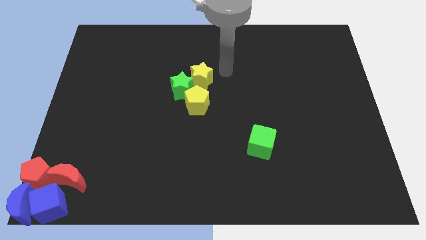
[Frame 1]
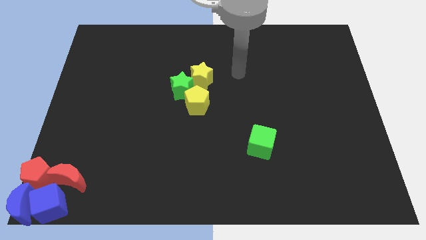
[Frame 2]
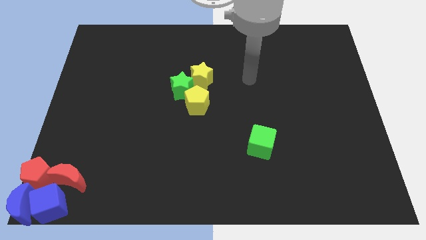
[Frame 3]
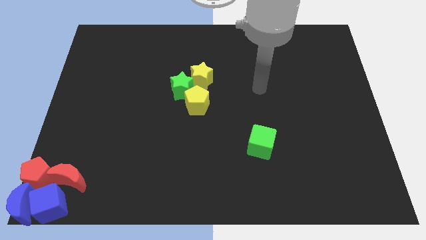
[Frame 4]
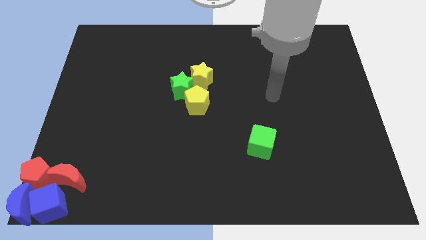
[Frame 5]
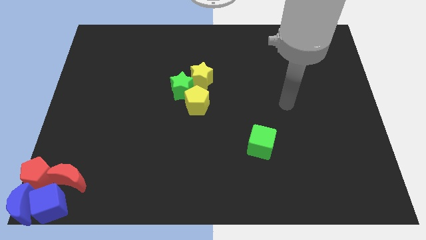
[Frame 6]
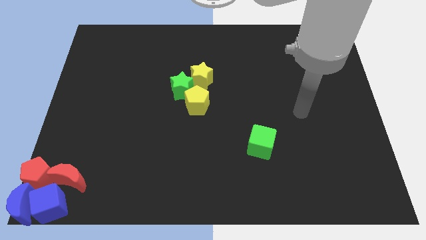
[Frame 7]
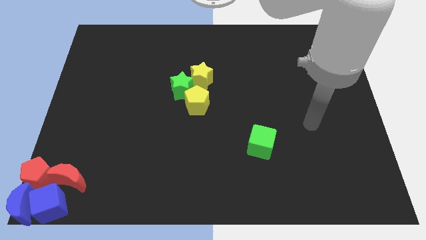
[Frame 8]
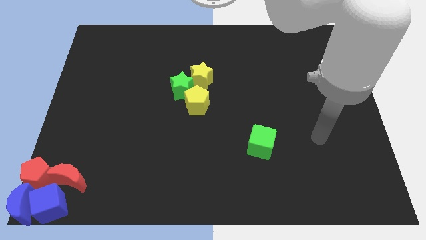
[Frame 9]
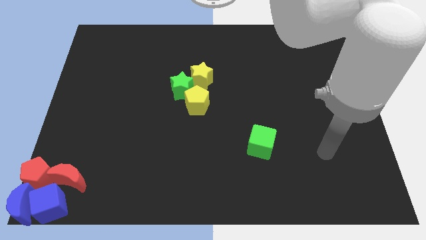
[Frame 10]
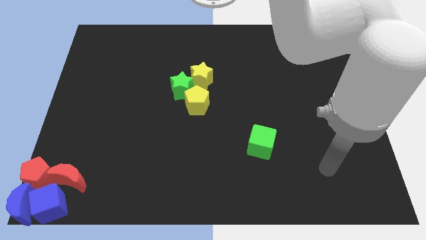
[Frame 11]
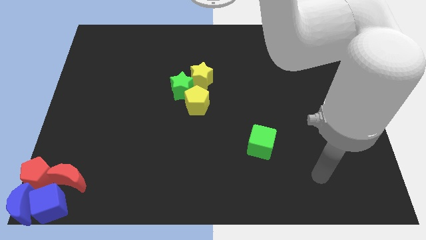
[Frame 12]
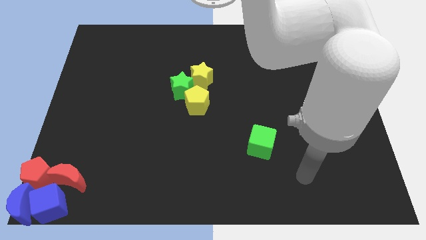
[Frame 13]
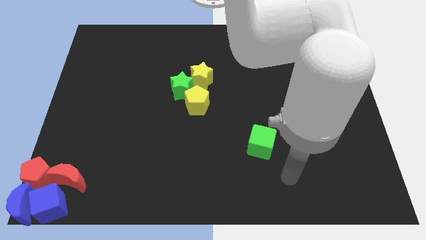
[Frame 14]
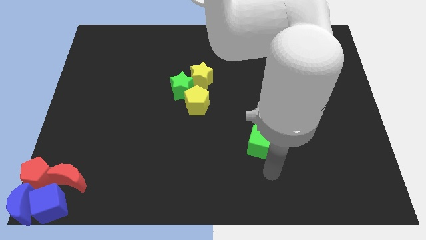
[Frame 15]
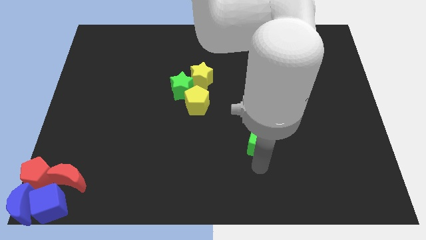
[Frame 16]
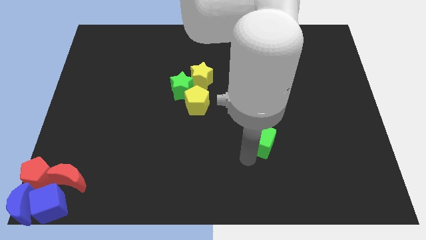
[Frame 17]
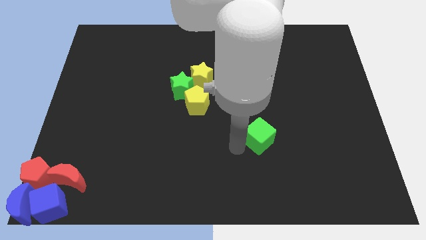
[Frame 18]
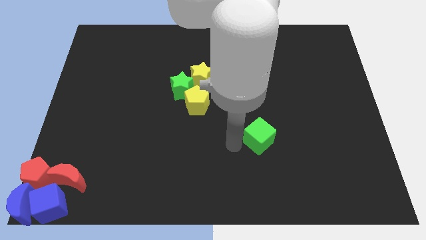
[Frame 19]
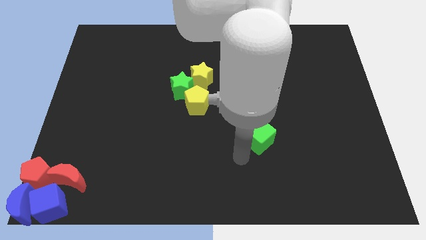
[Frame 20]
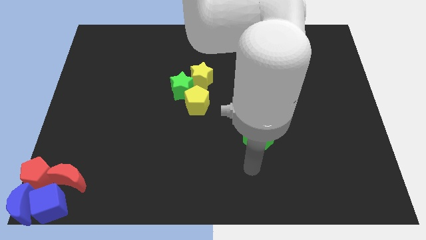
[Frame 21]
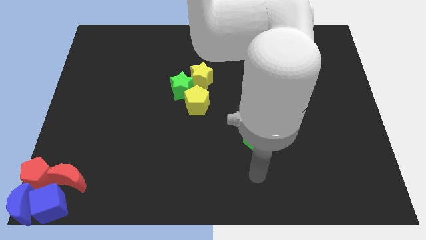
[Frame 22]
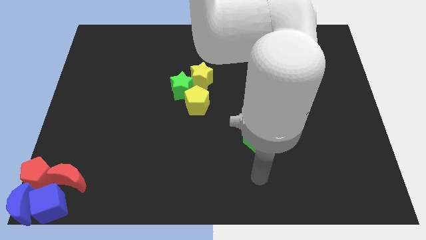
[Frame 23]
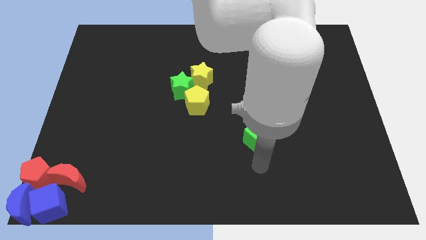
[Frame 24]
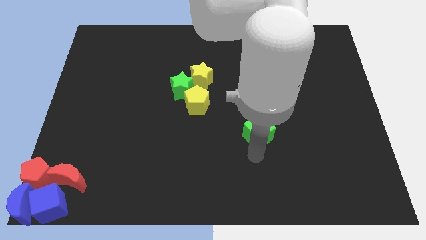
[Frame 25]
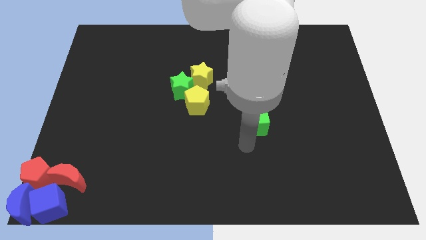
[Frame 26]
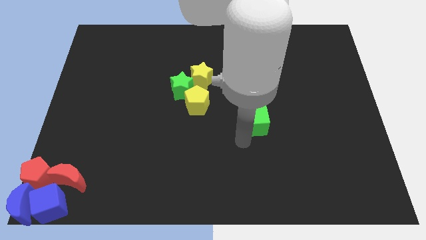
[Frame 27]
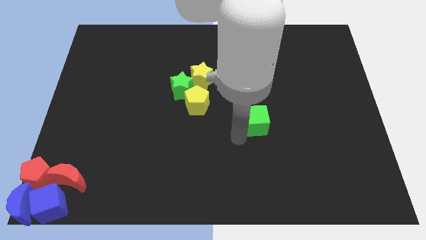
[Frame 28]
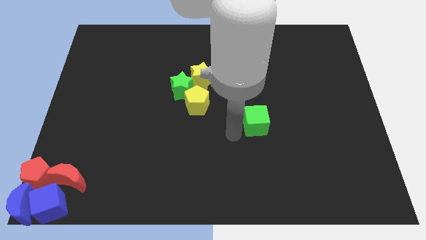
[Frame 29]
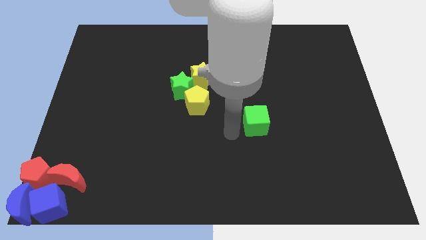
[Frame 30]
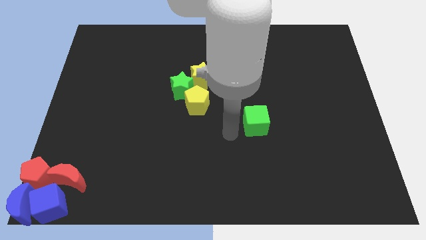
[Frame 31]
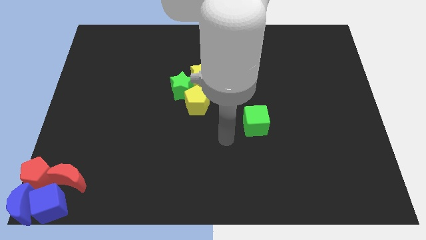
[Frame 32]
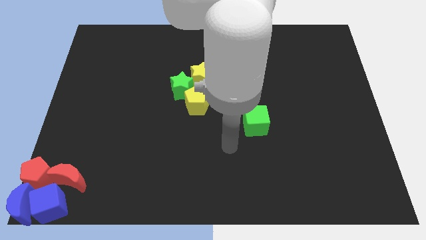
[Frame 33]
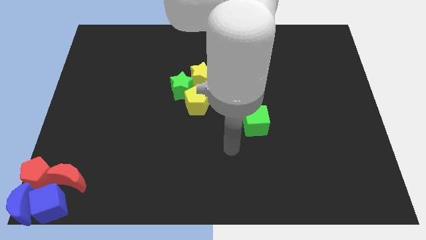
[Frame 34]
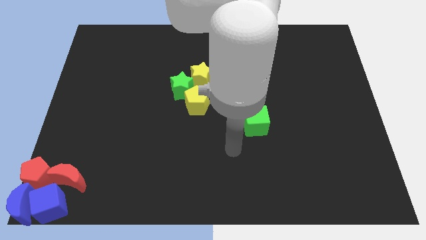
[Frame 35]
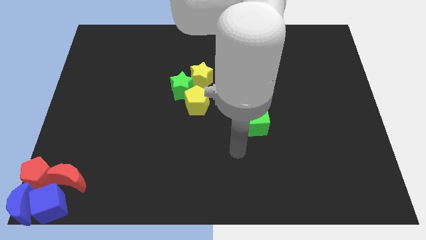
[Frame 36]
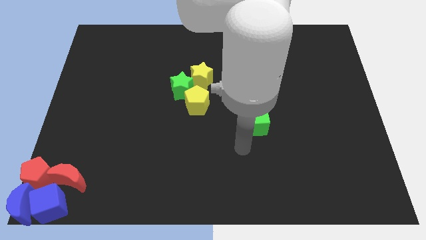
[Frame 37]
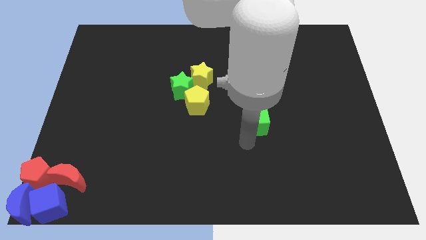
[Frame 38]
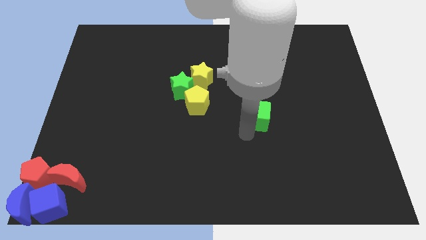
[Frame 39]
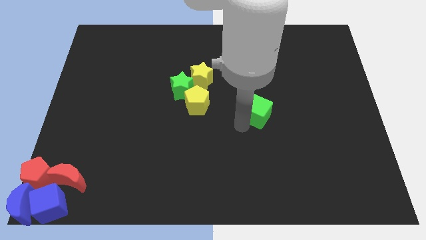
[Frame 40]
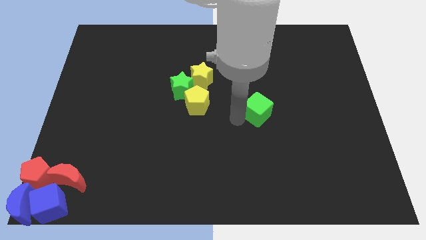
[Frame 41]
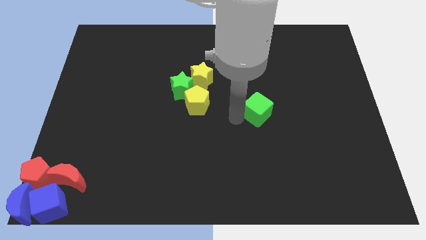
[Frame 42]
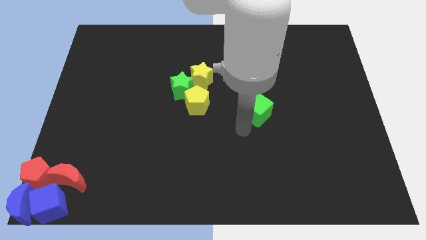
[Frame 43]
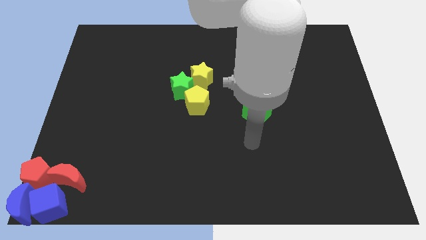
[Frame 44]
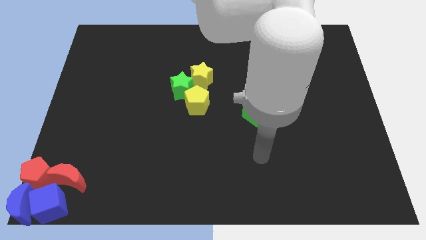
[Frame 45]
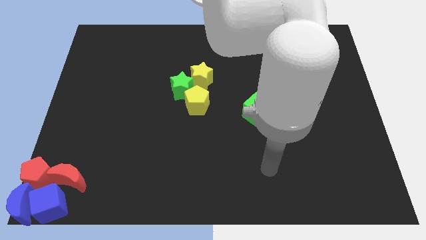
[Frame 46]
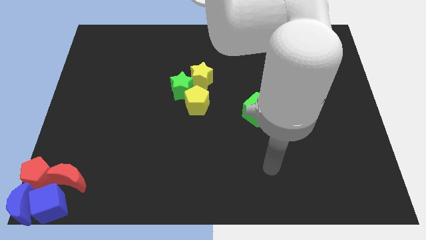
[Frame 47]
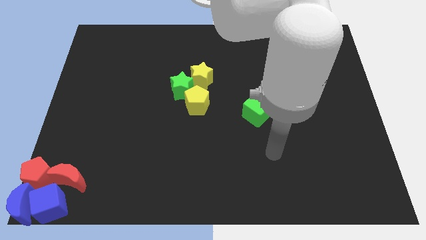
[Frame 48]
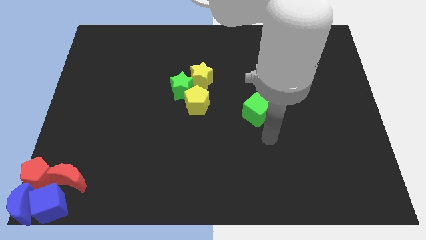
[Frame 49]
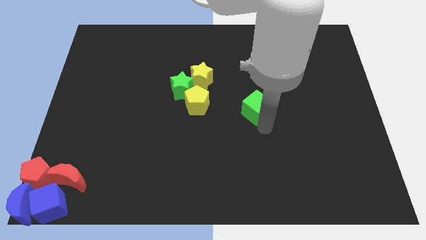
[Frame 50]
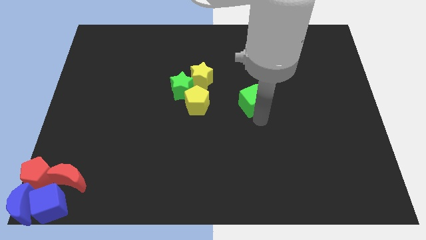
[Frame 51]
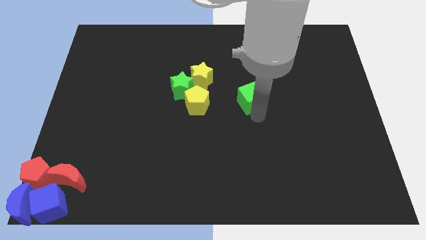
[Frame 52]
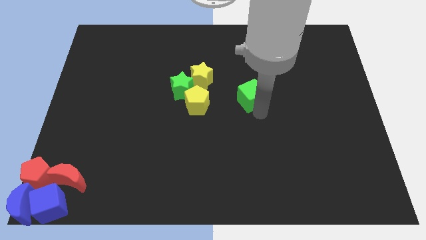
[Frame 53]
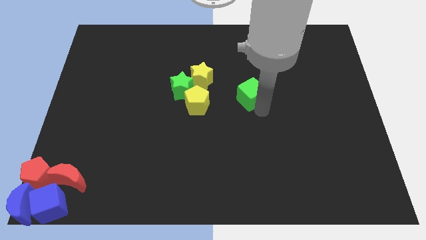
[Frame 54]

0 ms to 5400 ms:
move the green cube to the center of the board

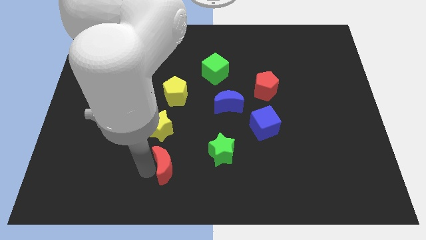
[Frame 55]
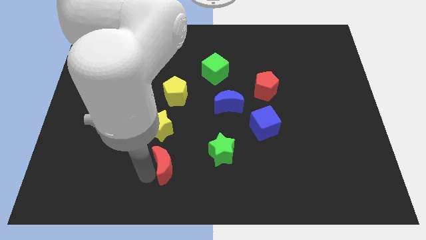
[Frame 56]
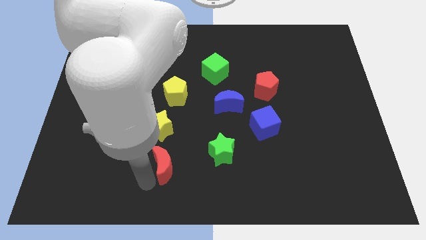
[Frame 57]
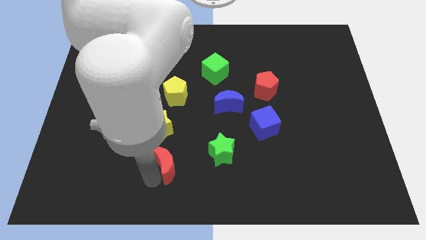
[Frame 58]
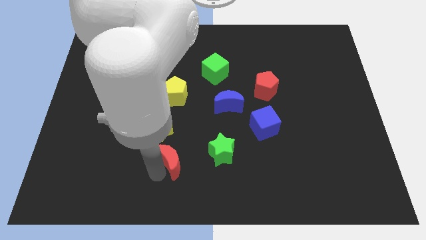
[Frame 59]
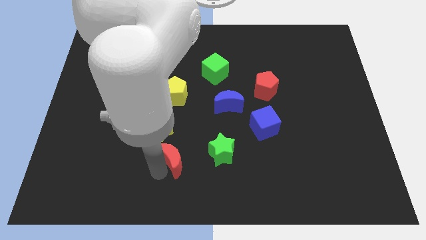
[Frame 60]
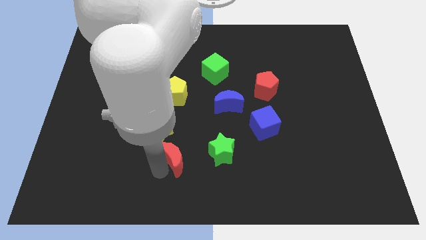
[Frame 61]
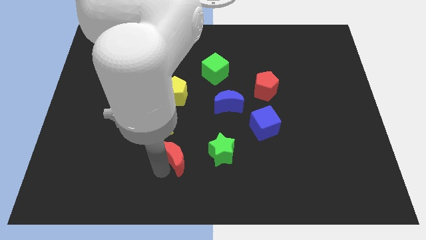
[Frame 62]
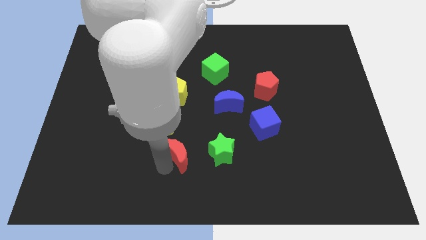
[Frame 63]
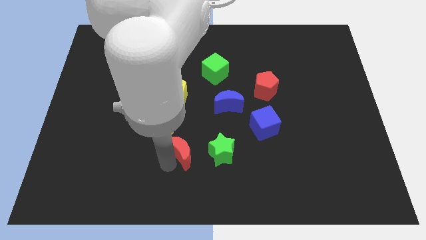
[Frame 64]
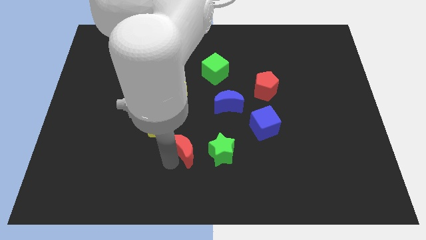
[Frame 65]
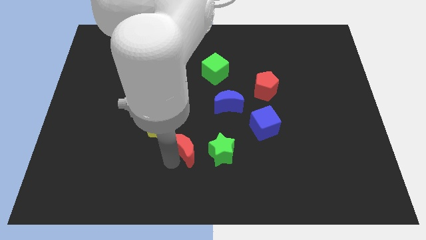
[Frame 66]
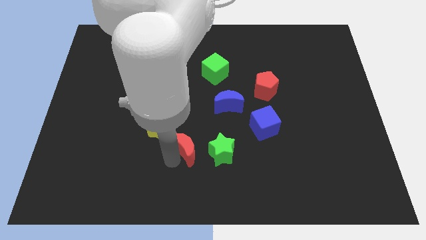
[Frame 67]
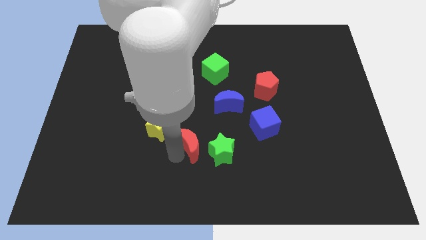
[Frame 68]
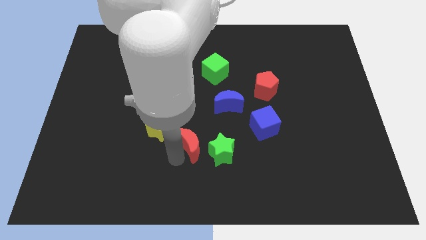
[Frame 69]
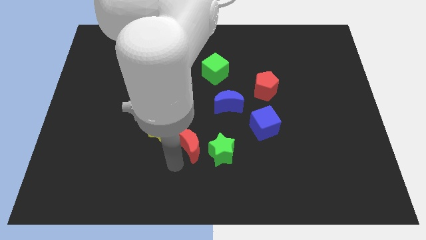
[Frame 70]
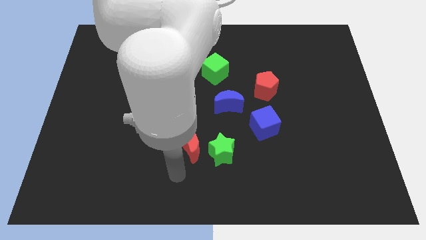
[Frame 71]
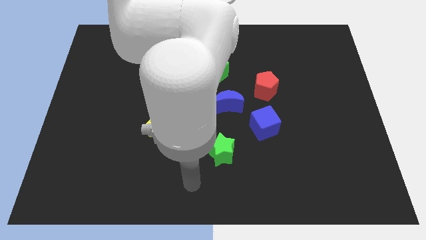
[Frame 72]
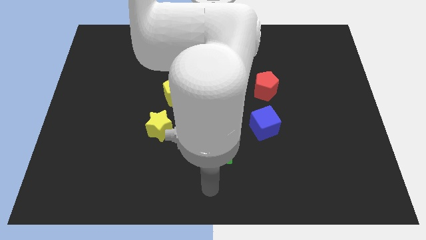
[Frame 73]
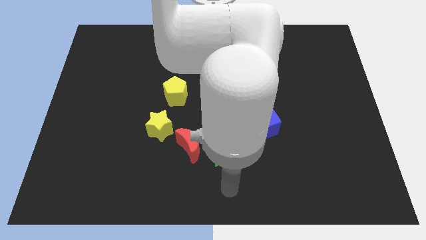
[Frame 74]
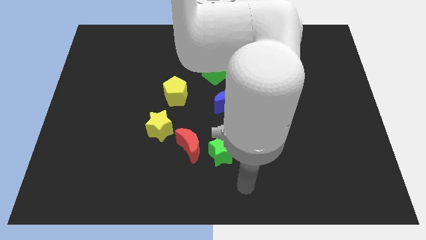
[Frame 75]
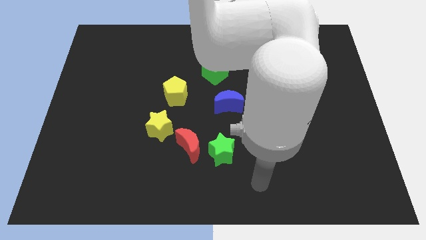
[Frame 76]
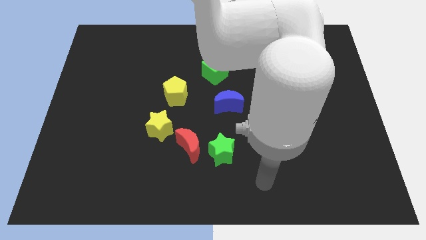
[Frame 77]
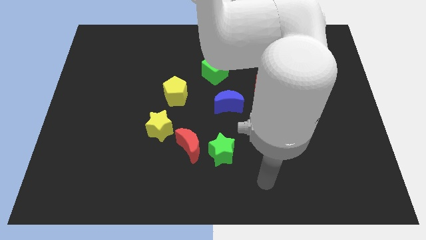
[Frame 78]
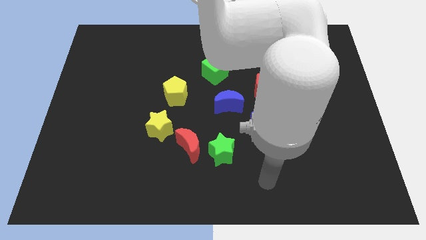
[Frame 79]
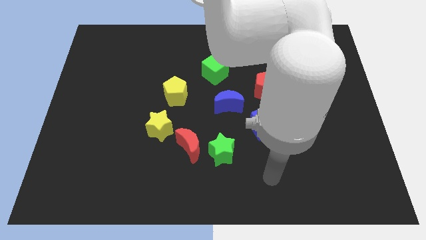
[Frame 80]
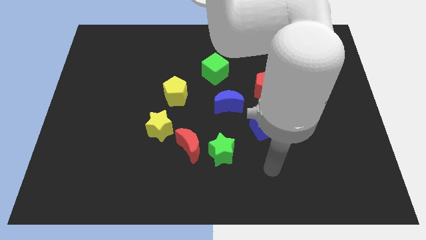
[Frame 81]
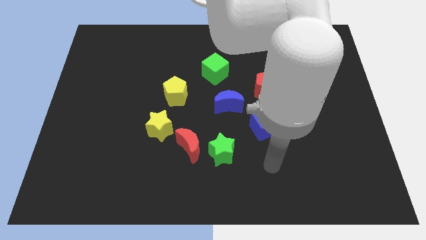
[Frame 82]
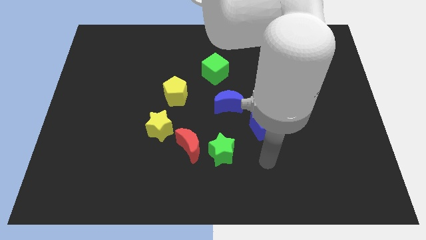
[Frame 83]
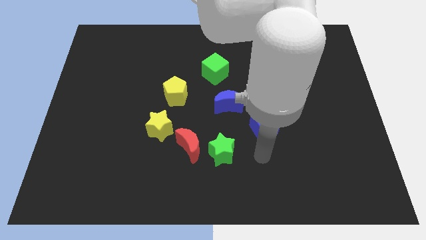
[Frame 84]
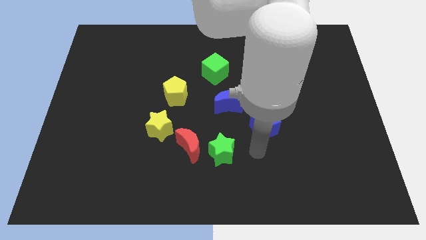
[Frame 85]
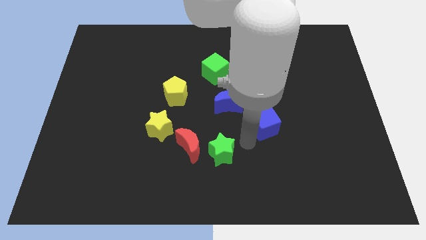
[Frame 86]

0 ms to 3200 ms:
place the red moon in between the yellow and green star

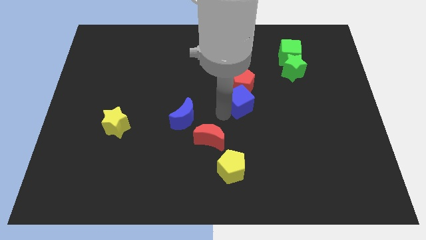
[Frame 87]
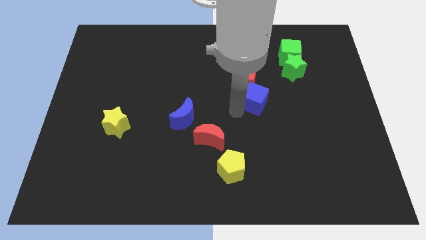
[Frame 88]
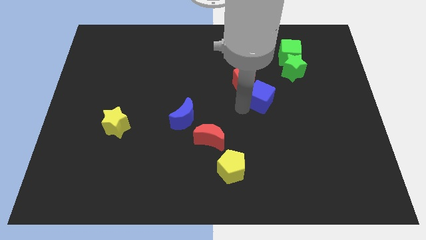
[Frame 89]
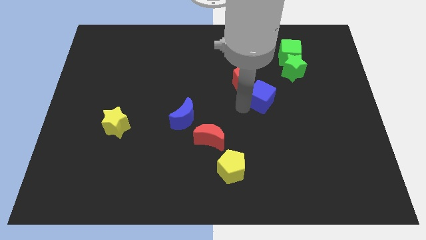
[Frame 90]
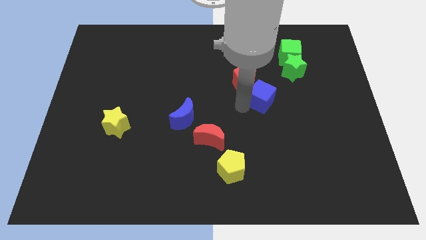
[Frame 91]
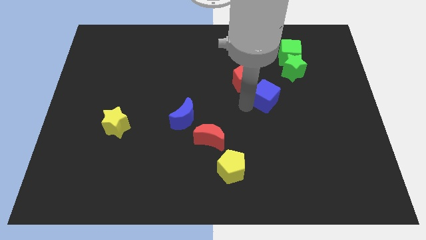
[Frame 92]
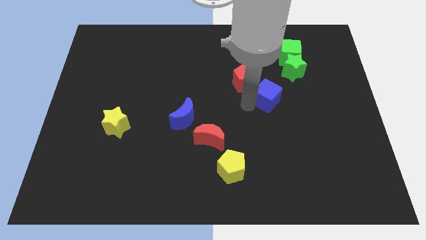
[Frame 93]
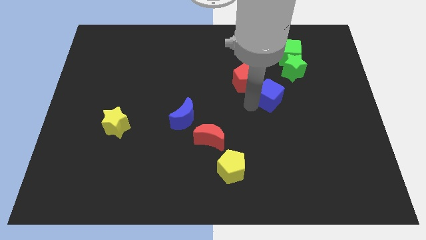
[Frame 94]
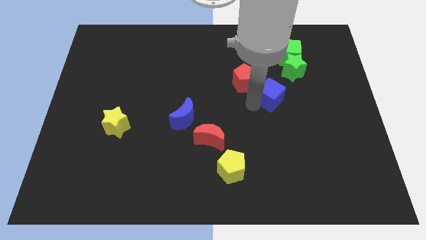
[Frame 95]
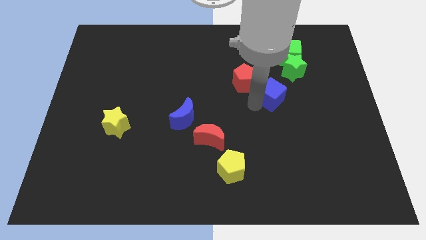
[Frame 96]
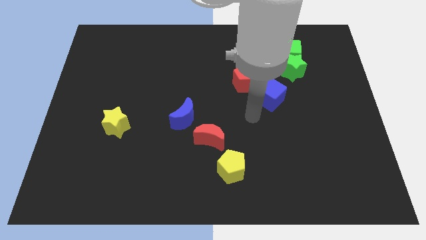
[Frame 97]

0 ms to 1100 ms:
move the blue cube below right of red pentagon
